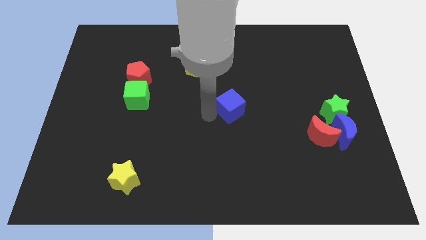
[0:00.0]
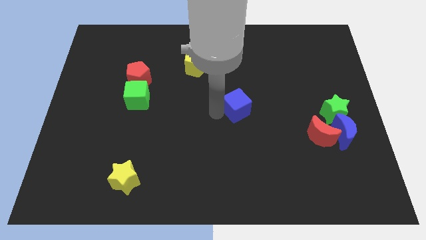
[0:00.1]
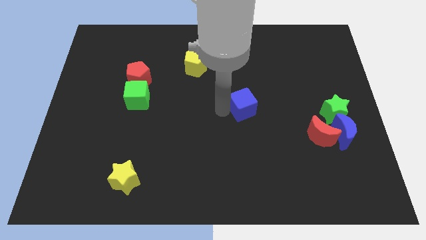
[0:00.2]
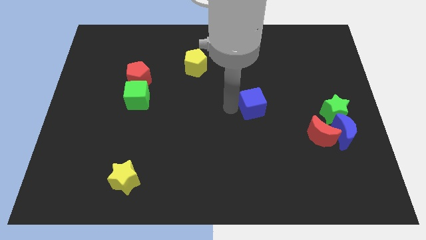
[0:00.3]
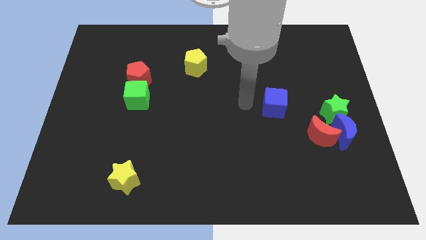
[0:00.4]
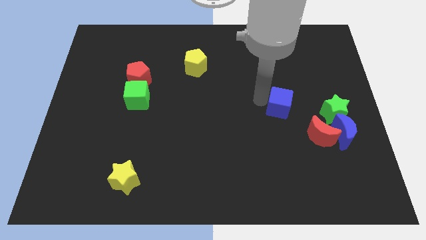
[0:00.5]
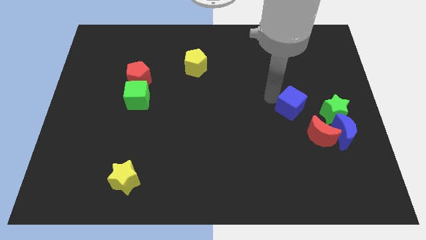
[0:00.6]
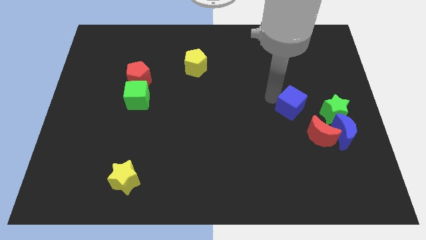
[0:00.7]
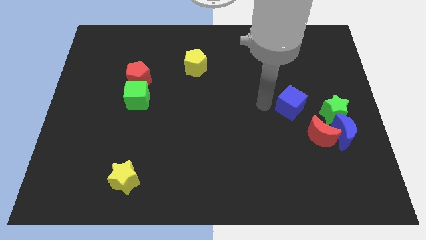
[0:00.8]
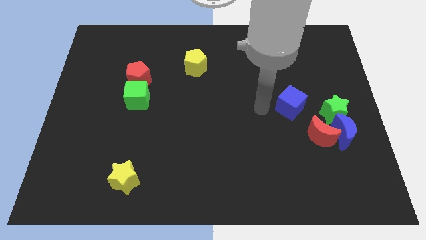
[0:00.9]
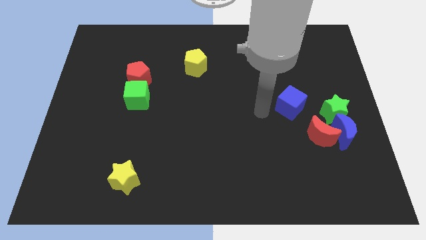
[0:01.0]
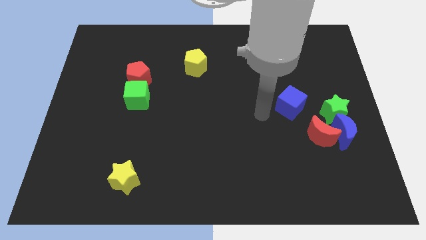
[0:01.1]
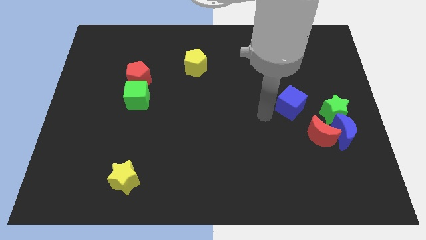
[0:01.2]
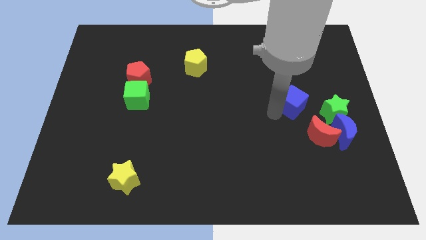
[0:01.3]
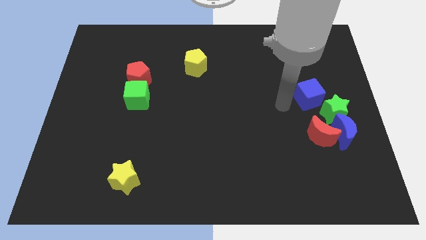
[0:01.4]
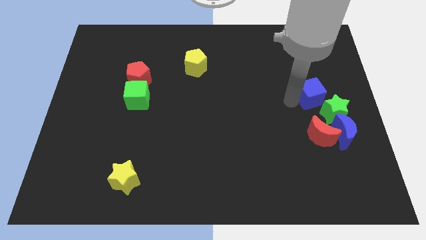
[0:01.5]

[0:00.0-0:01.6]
place cube beside group of blocks

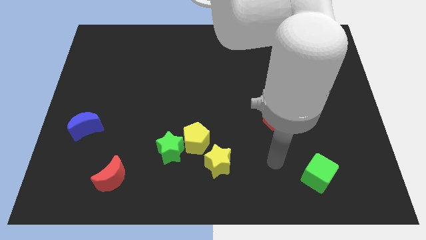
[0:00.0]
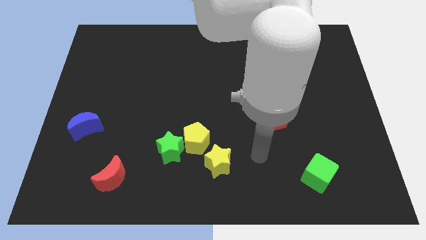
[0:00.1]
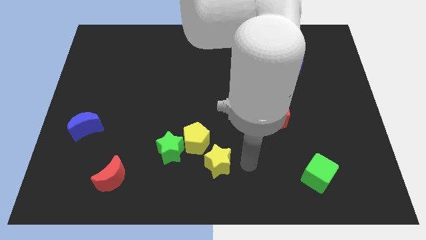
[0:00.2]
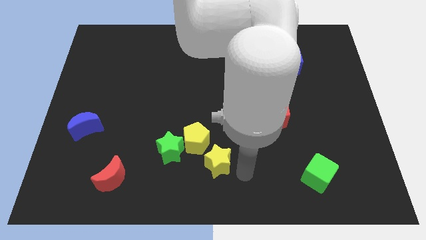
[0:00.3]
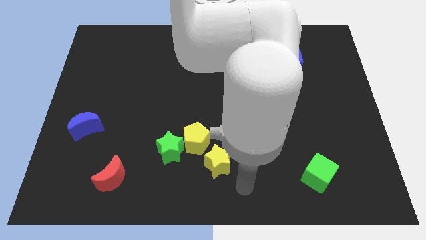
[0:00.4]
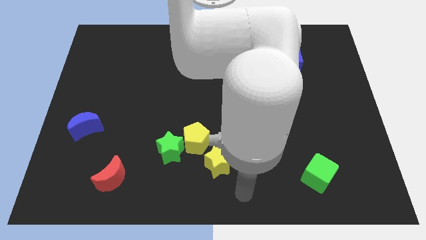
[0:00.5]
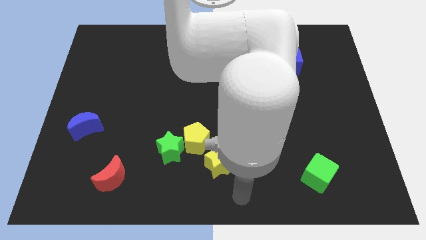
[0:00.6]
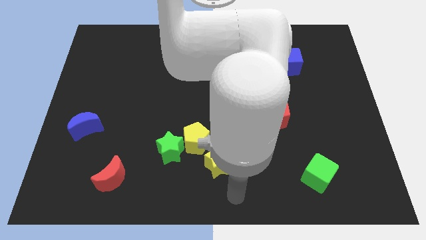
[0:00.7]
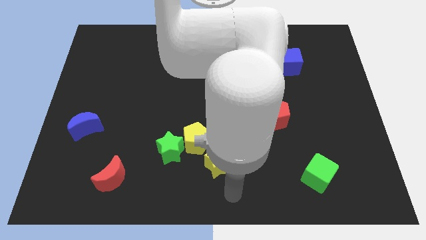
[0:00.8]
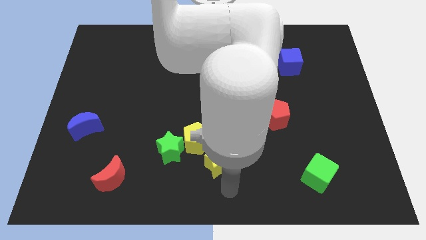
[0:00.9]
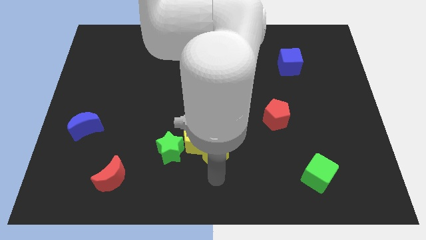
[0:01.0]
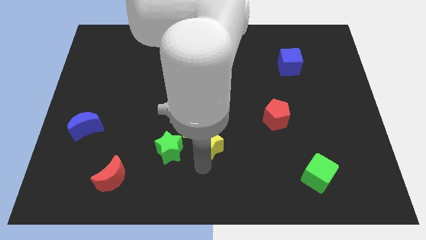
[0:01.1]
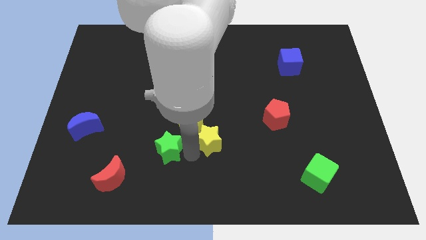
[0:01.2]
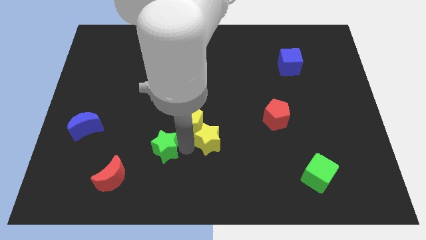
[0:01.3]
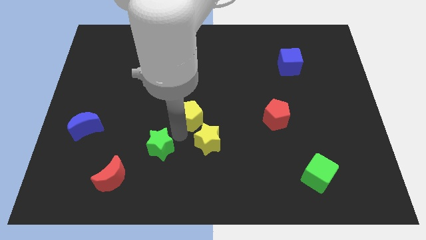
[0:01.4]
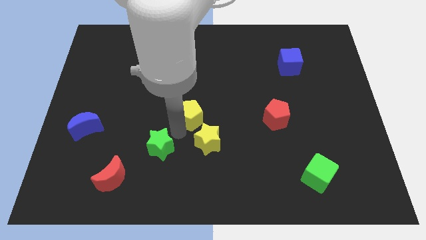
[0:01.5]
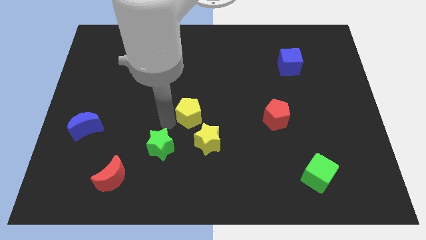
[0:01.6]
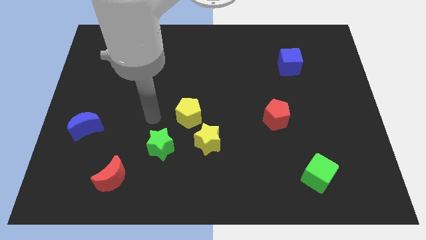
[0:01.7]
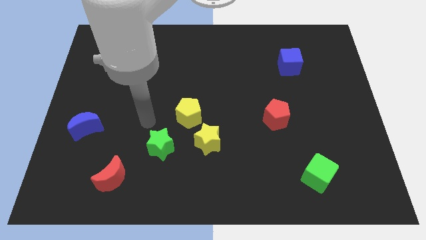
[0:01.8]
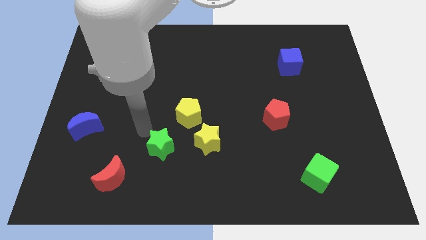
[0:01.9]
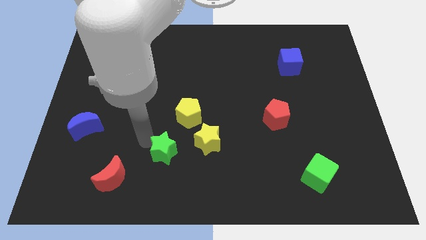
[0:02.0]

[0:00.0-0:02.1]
move yellow pentagon and yellow star away from the green star

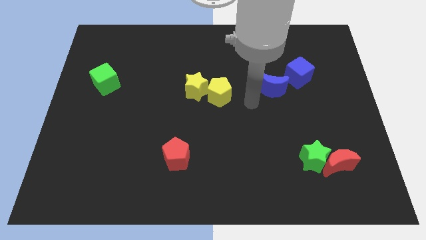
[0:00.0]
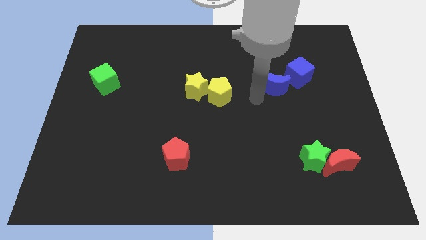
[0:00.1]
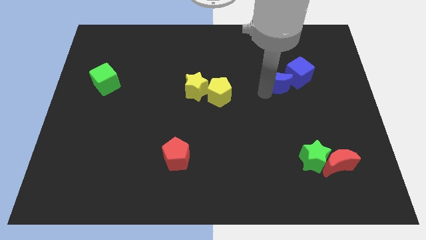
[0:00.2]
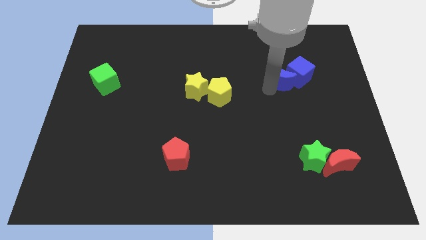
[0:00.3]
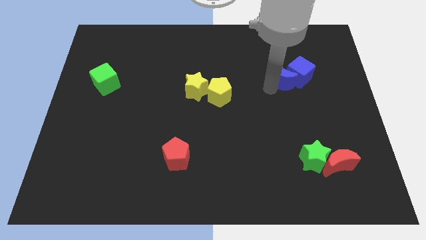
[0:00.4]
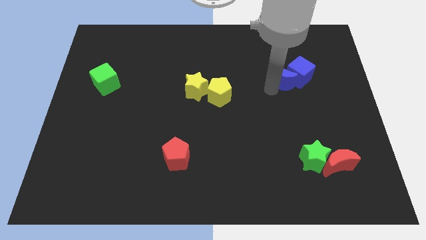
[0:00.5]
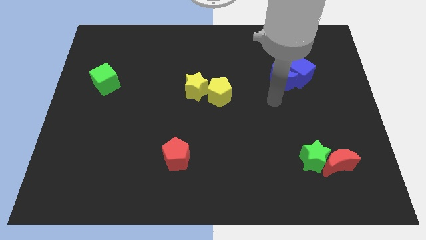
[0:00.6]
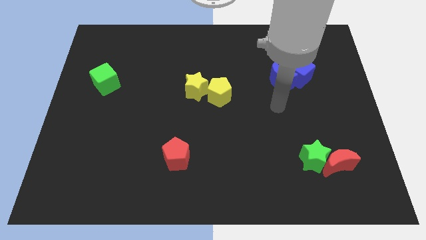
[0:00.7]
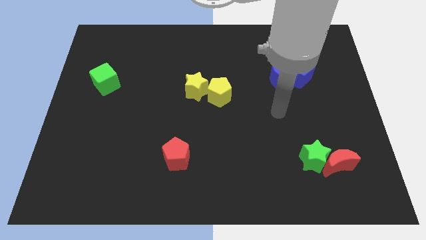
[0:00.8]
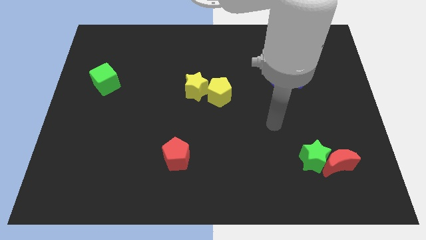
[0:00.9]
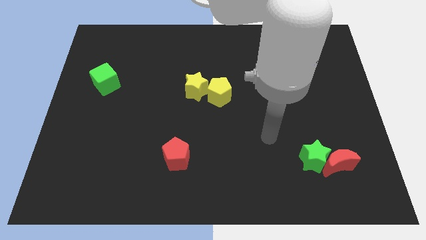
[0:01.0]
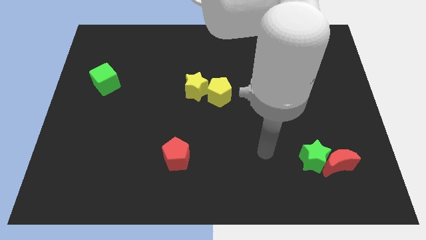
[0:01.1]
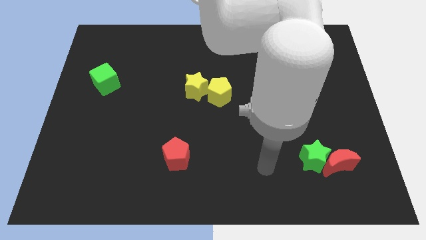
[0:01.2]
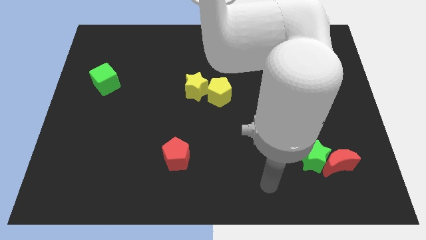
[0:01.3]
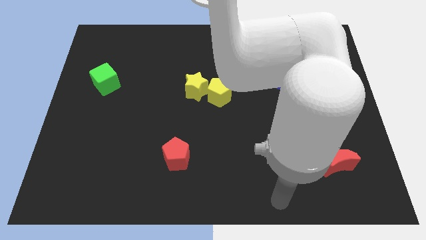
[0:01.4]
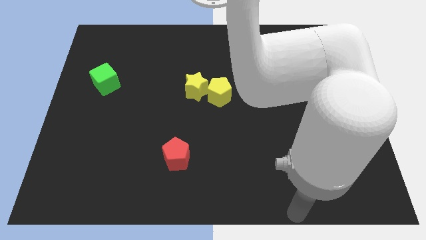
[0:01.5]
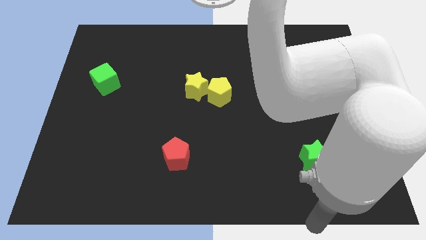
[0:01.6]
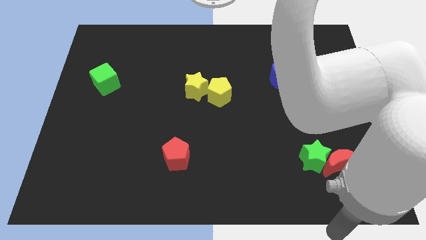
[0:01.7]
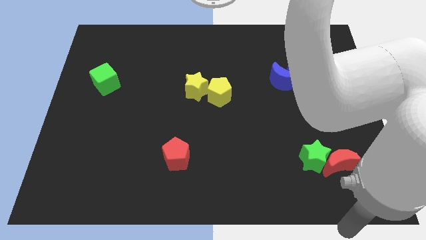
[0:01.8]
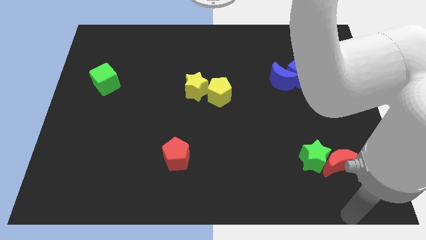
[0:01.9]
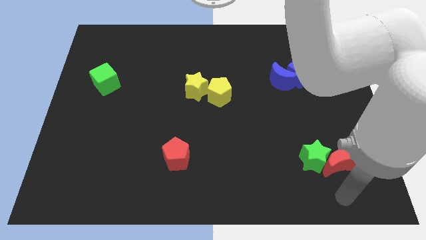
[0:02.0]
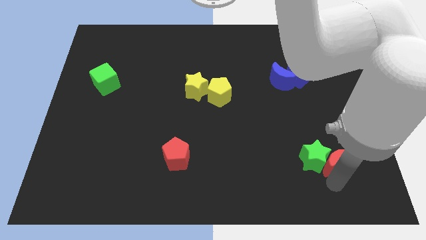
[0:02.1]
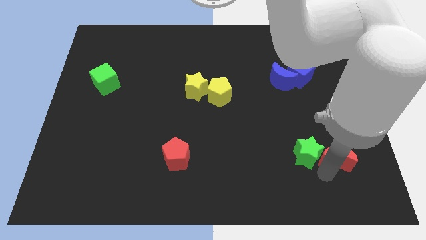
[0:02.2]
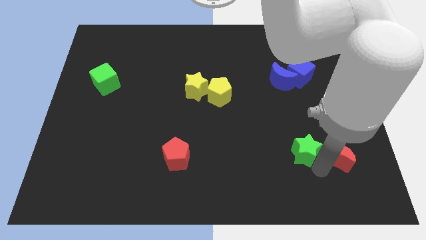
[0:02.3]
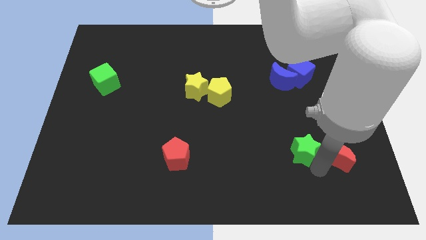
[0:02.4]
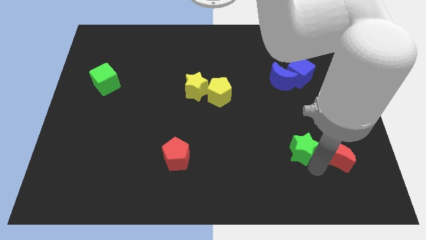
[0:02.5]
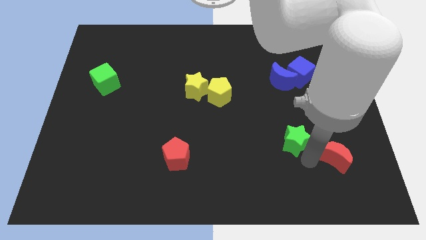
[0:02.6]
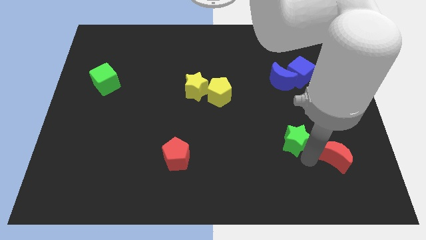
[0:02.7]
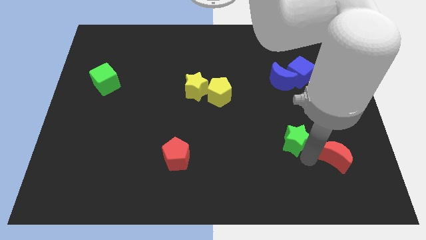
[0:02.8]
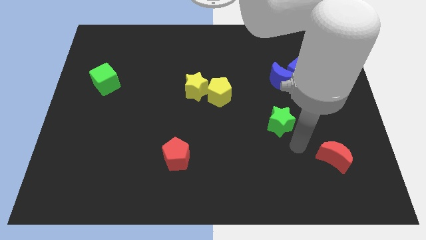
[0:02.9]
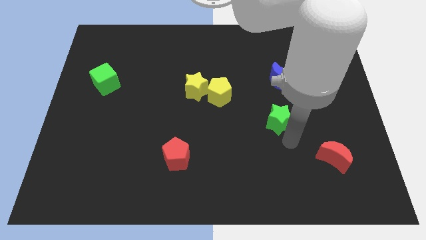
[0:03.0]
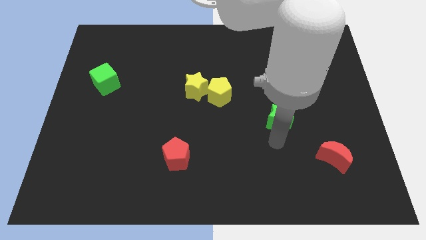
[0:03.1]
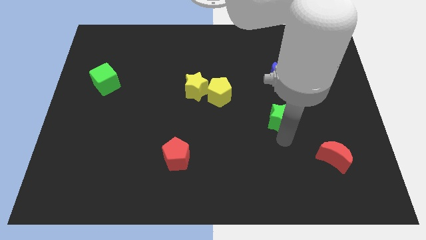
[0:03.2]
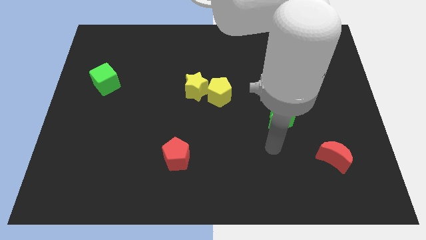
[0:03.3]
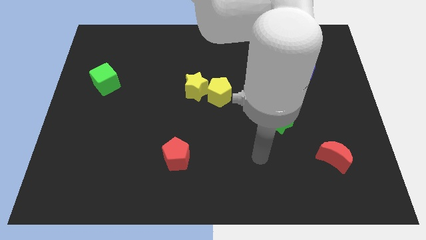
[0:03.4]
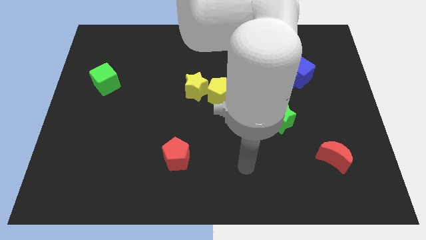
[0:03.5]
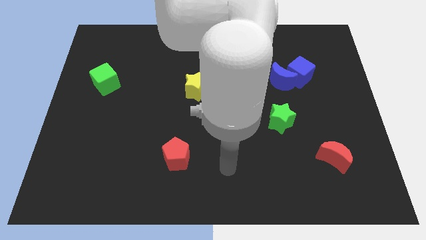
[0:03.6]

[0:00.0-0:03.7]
push the green star to the bottom of blue crescent

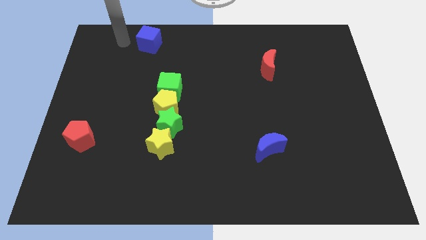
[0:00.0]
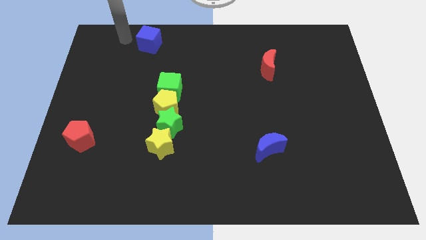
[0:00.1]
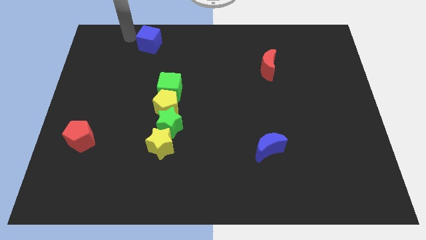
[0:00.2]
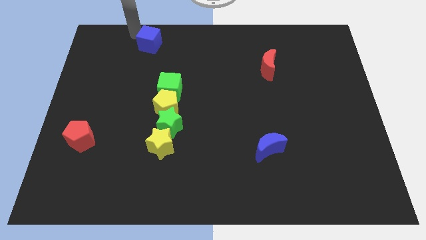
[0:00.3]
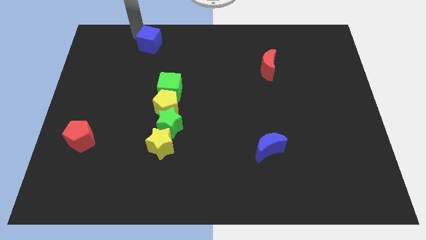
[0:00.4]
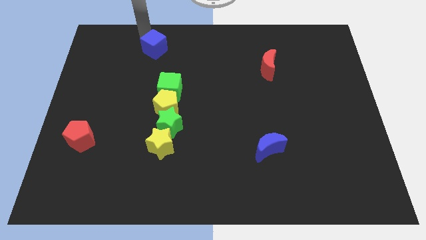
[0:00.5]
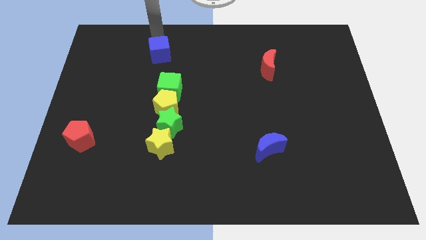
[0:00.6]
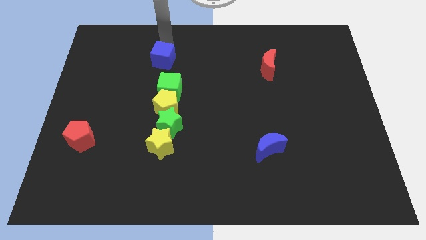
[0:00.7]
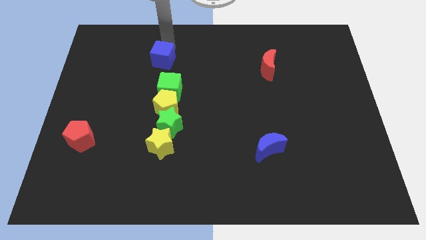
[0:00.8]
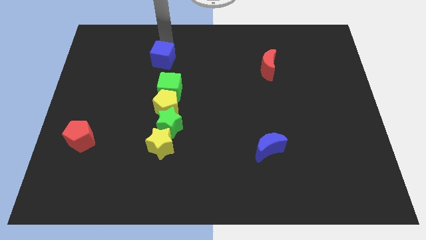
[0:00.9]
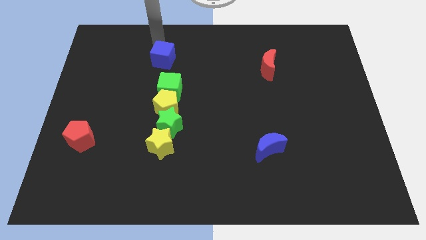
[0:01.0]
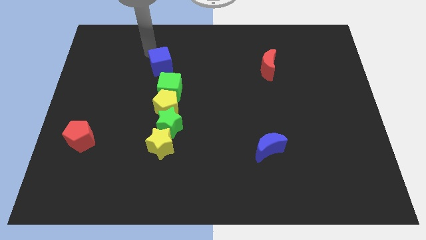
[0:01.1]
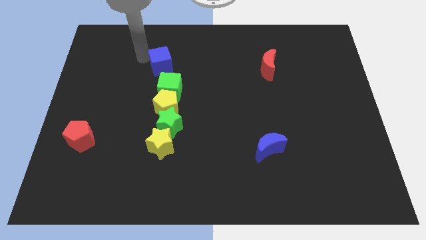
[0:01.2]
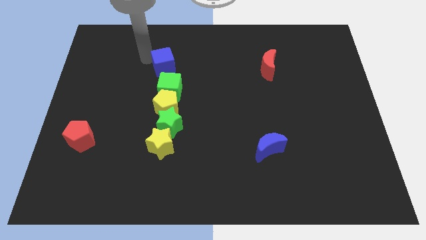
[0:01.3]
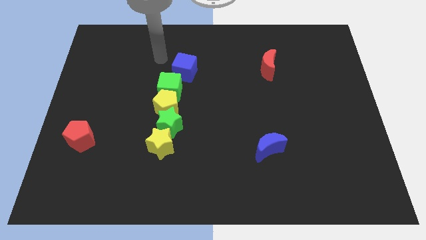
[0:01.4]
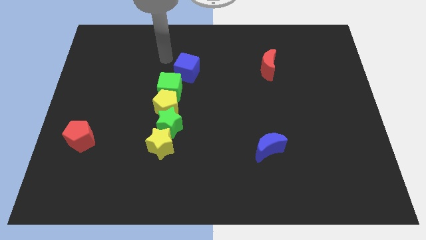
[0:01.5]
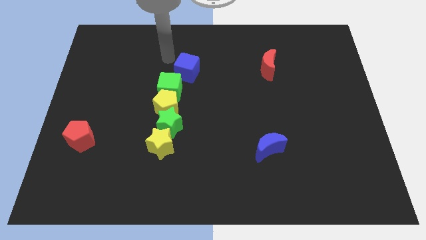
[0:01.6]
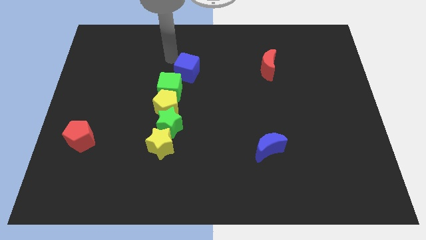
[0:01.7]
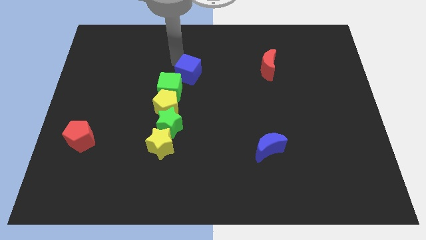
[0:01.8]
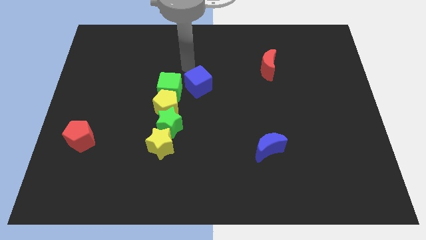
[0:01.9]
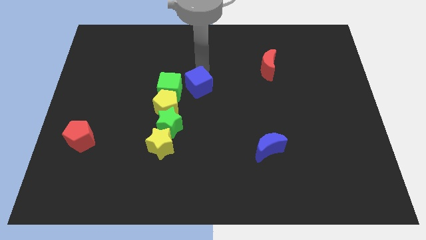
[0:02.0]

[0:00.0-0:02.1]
push the blue cube right to the green cube
